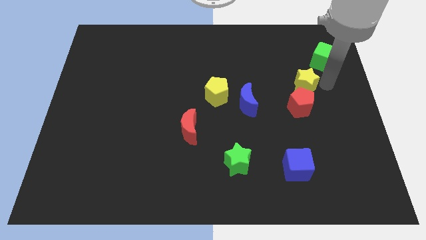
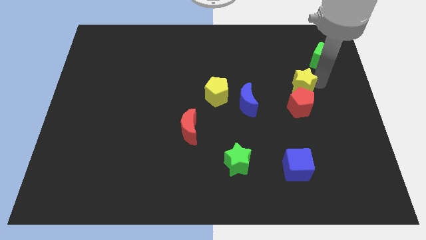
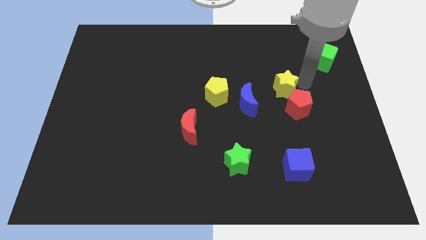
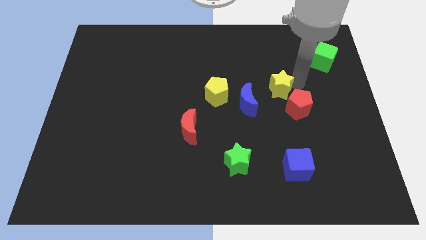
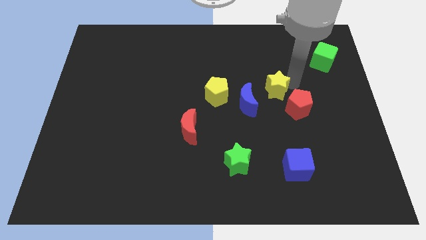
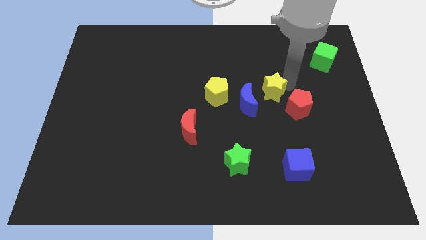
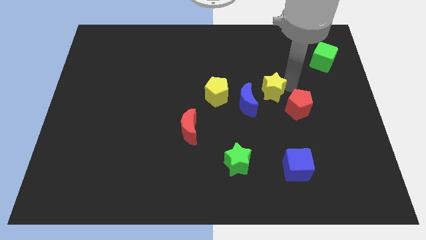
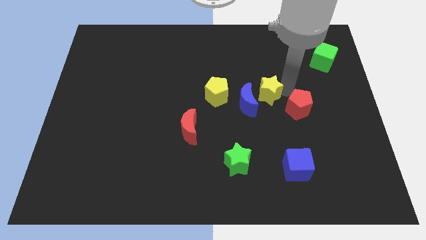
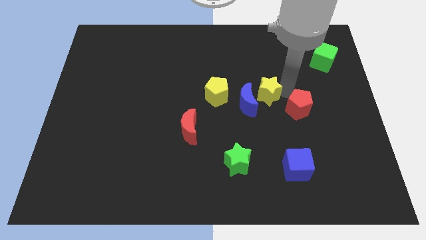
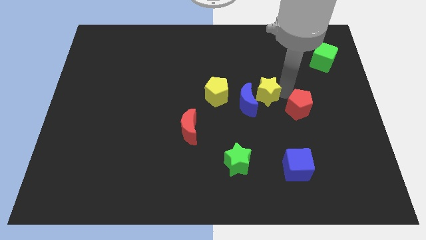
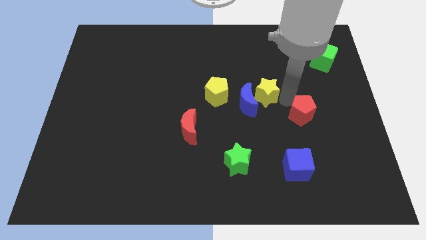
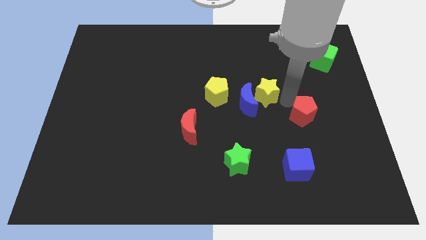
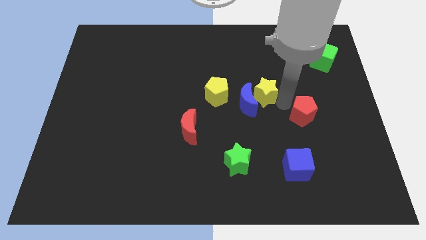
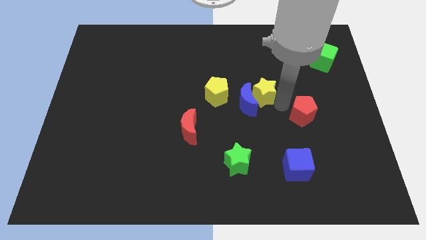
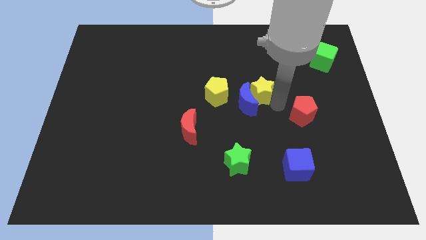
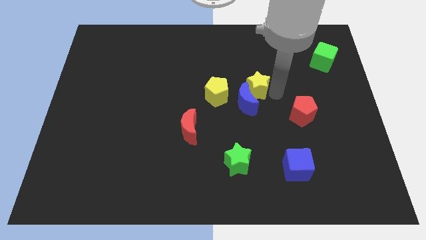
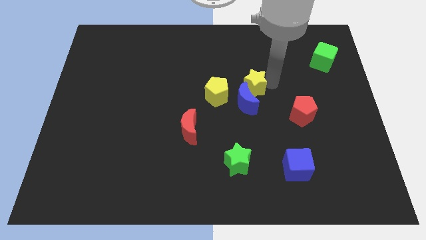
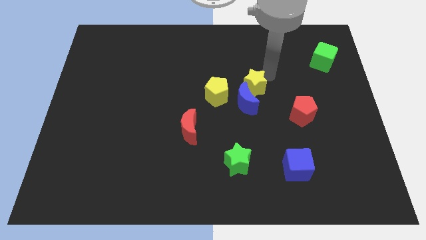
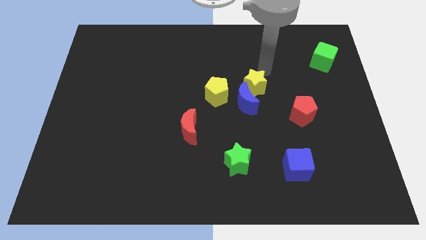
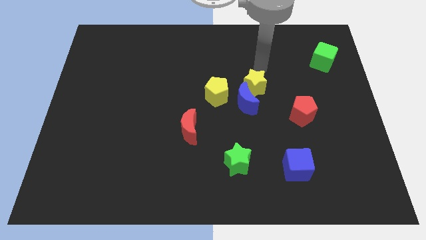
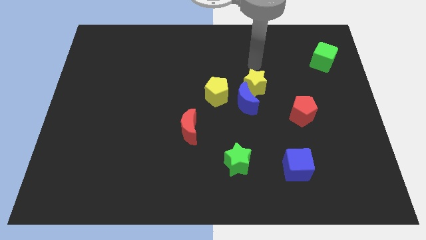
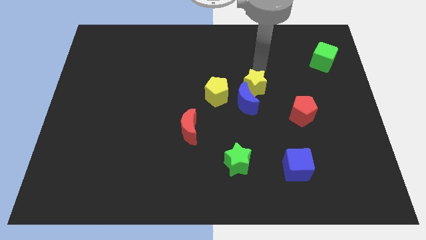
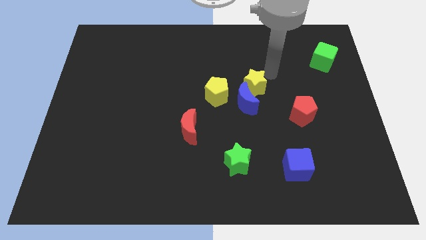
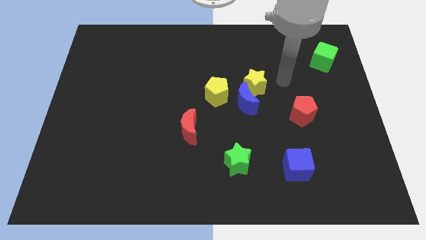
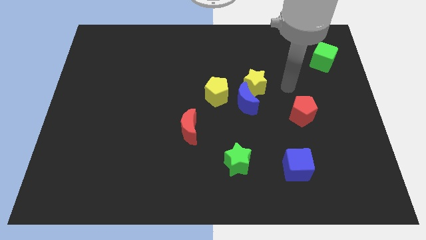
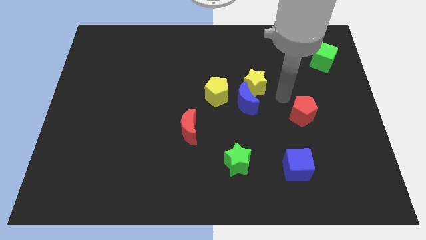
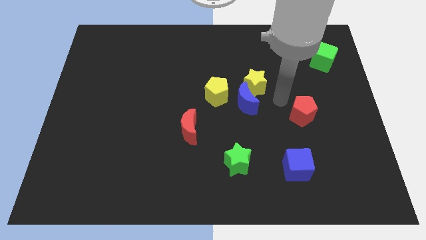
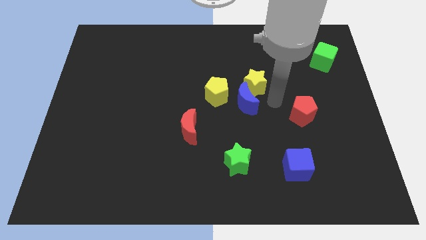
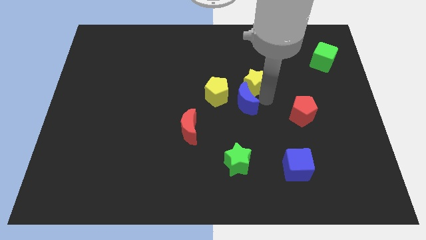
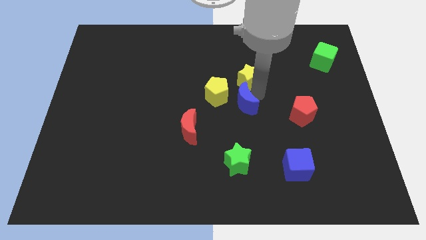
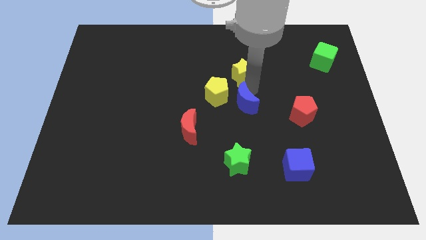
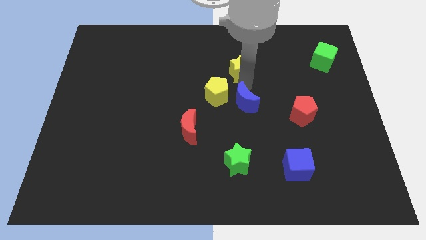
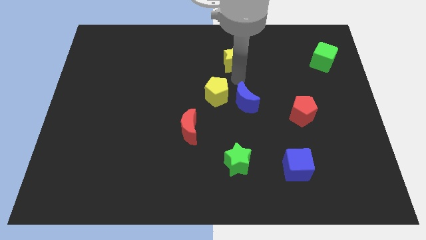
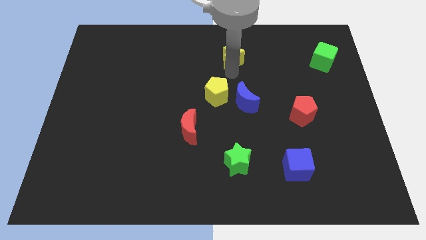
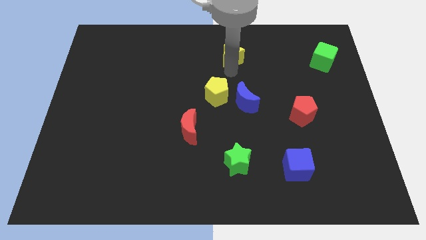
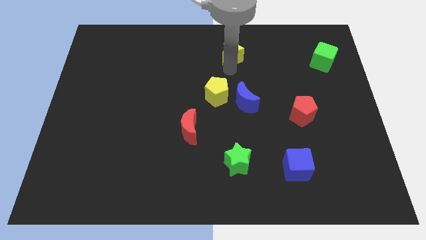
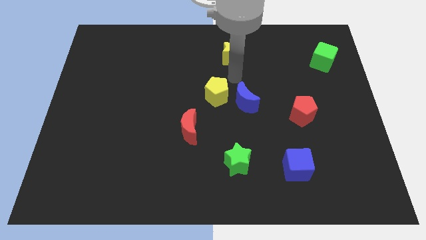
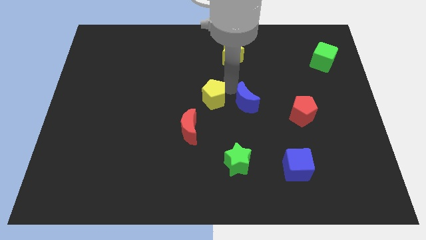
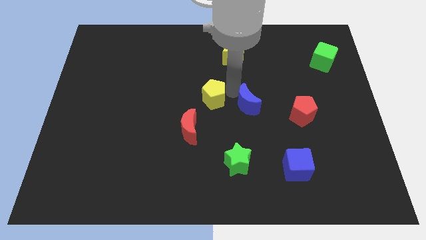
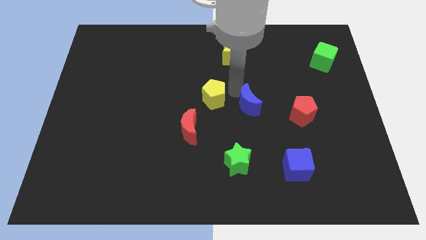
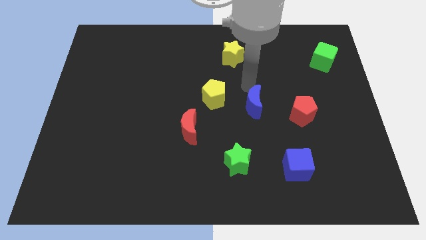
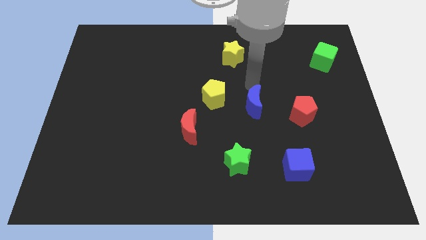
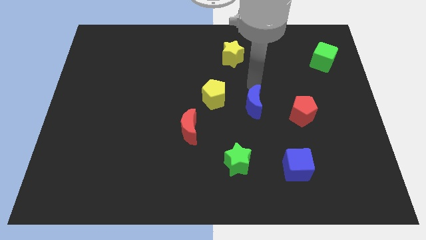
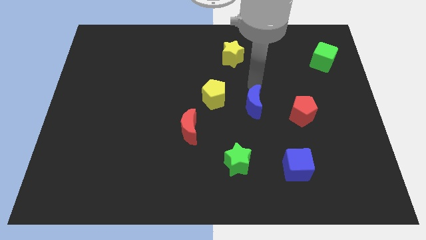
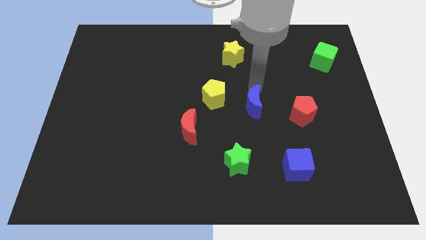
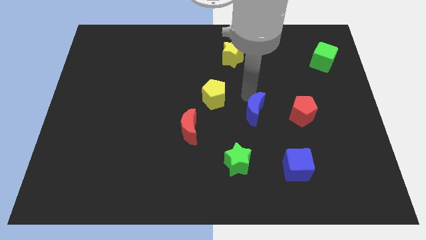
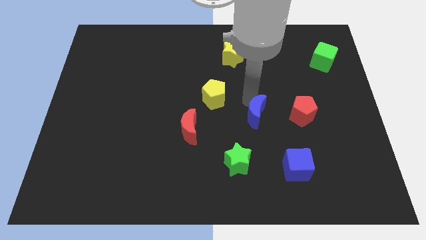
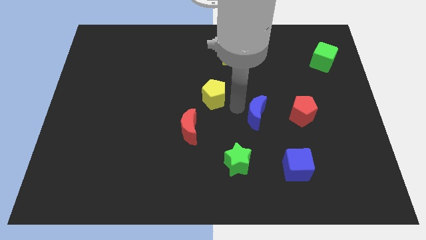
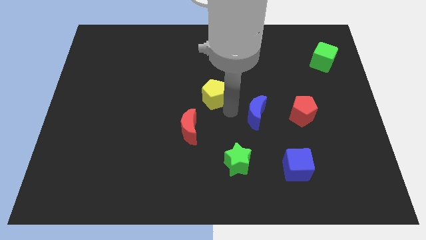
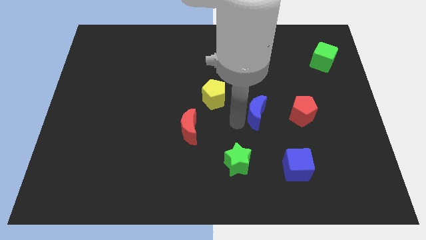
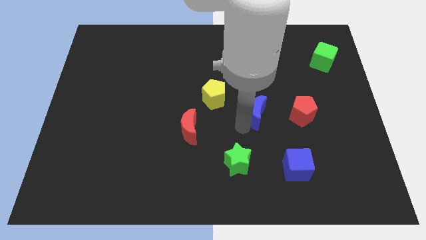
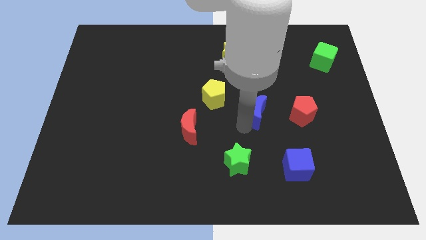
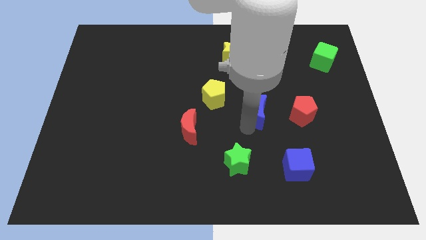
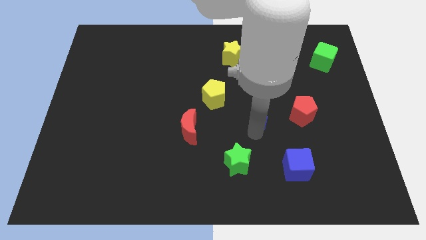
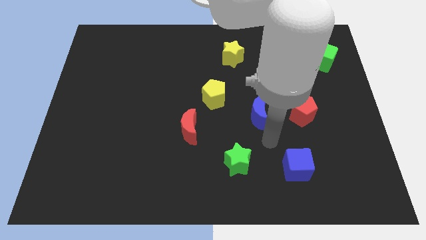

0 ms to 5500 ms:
place the yellow star vertically to the bottom of the blue crescent

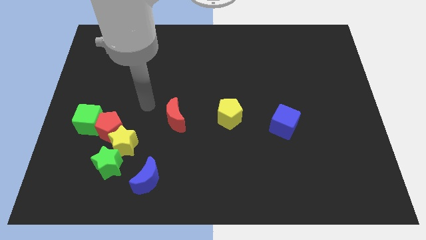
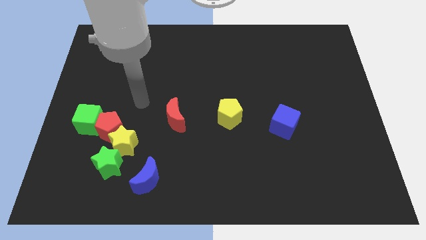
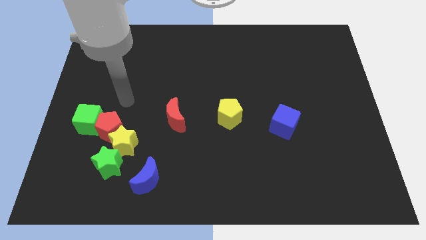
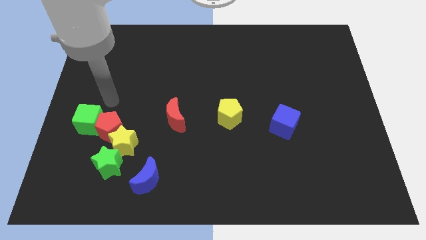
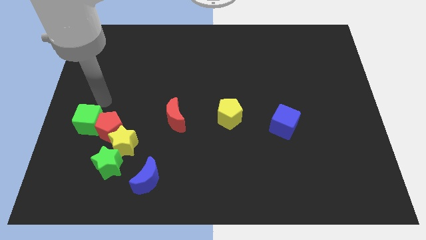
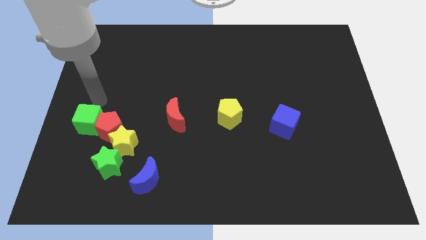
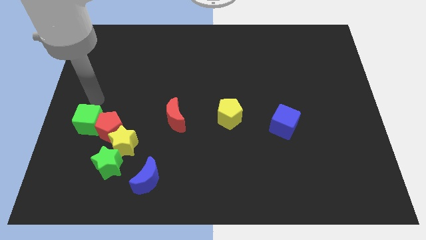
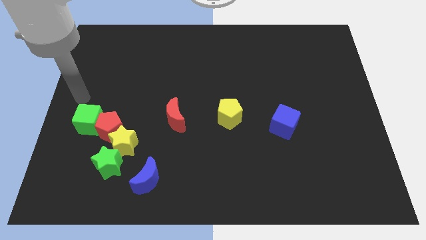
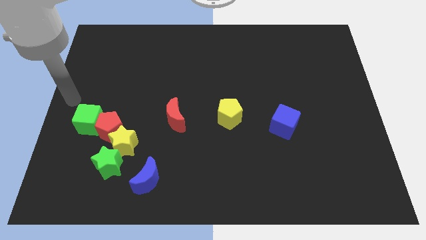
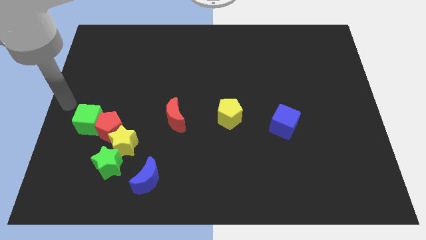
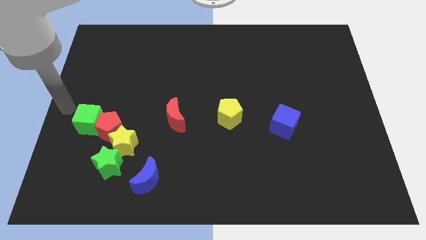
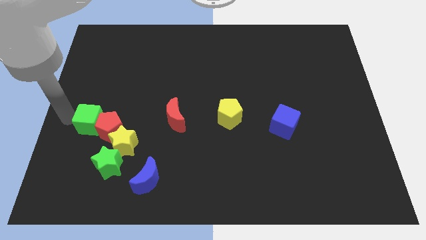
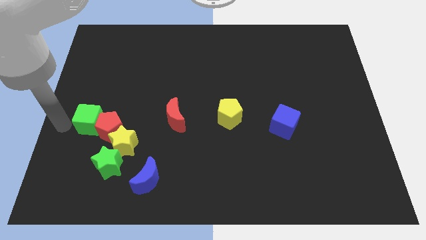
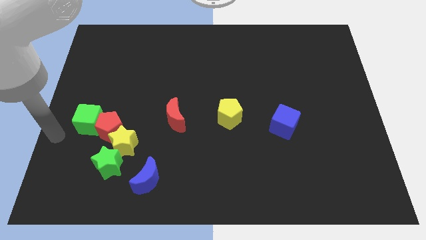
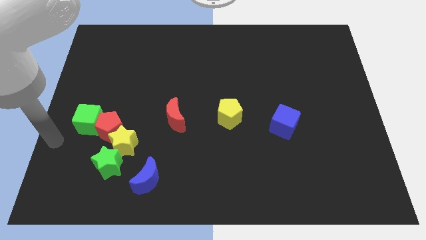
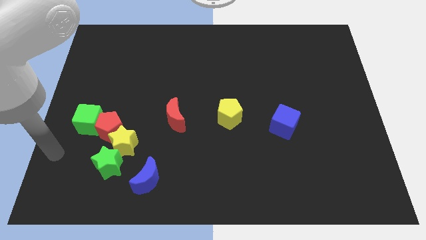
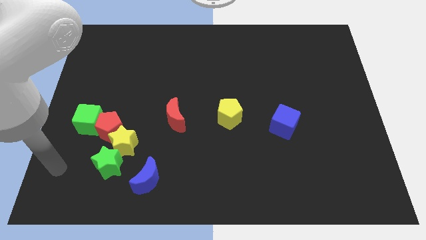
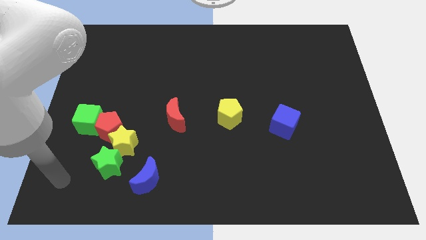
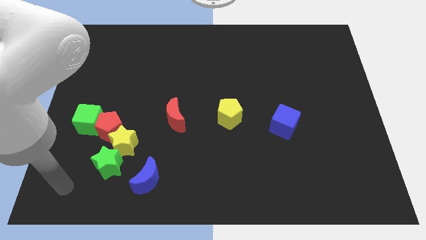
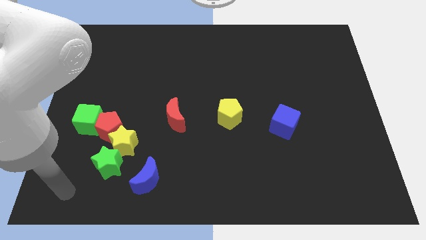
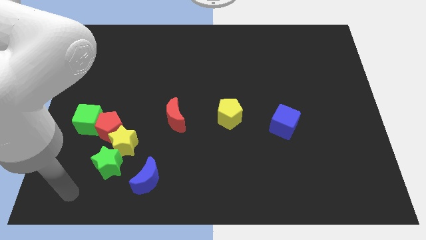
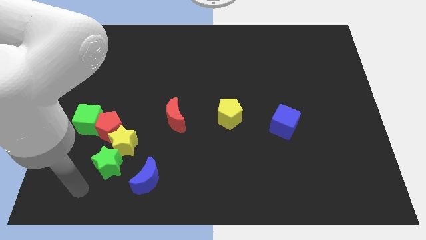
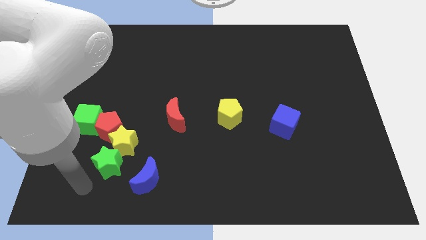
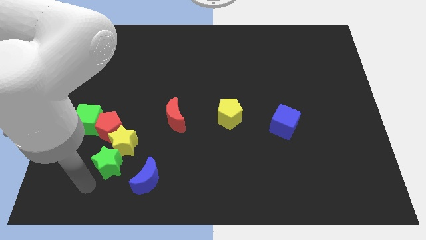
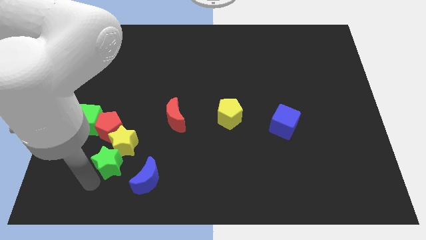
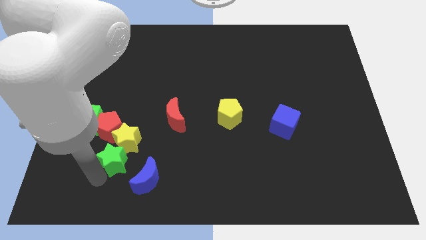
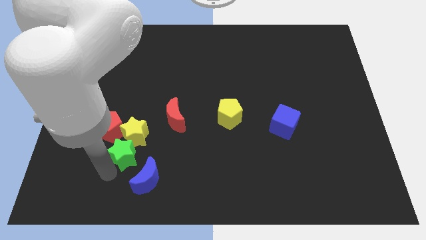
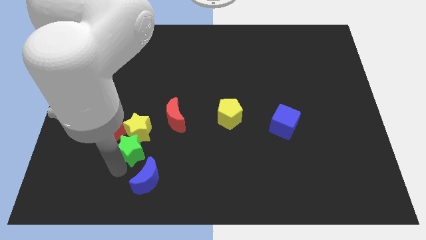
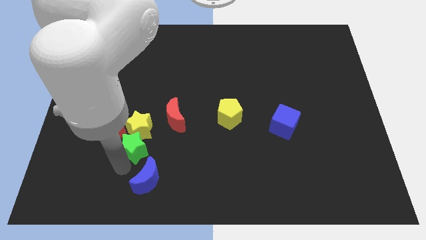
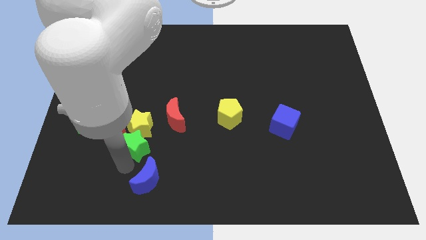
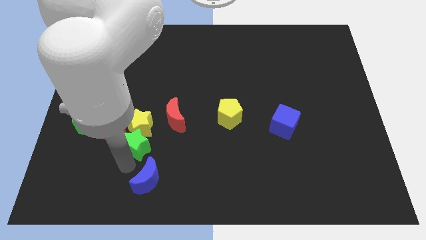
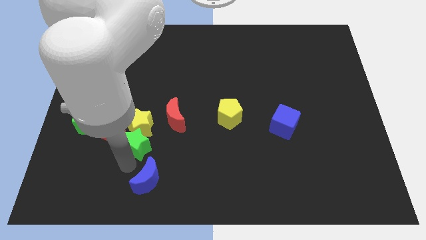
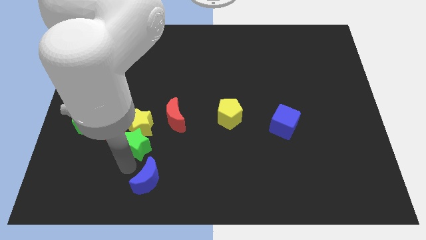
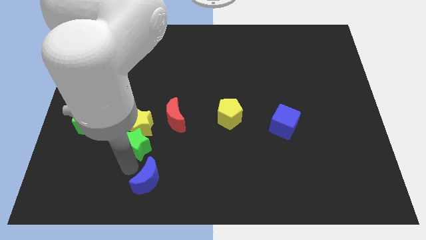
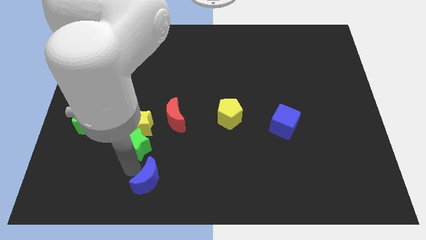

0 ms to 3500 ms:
push the yellow and green stars to the right of the red pentagon
